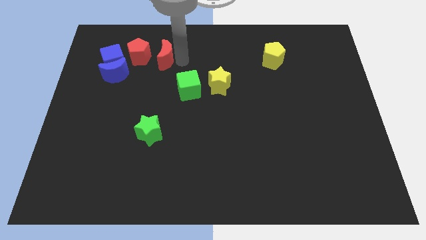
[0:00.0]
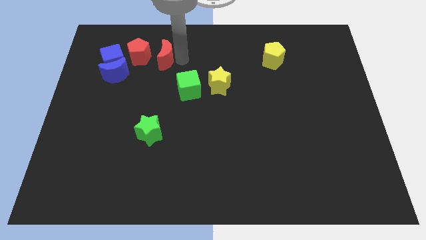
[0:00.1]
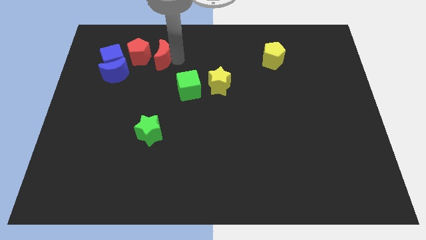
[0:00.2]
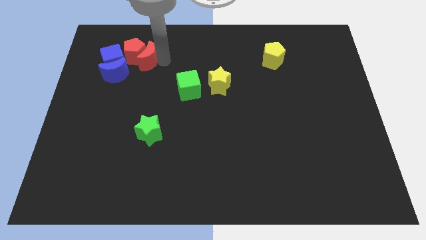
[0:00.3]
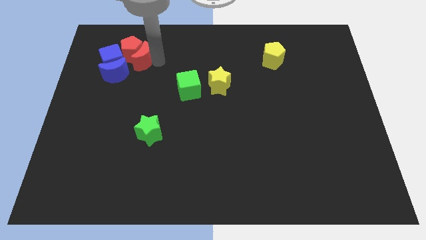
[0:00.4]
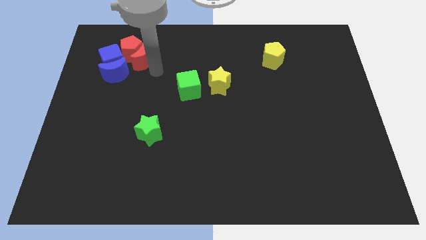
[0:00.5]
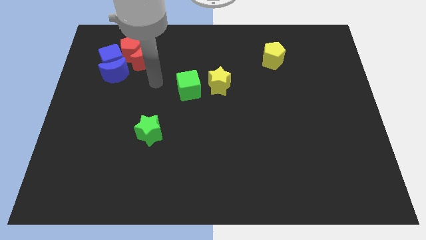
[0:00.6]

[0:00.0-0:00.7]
push red moon into red pentagon

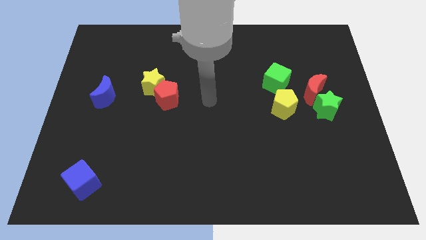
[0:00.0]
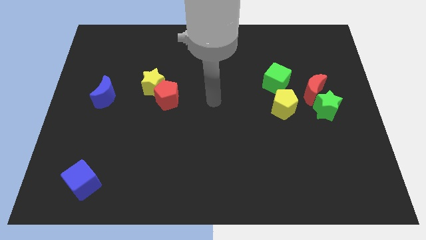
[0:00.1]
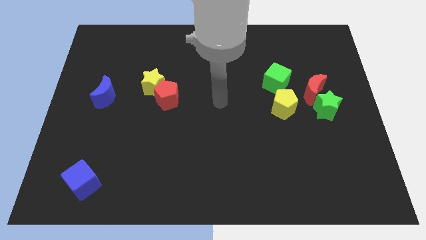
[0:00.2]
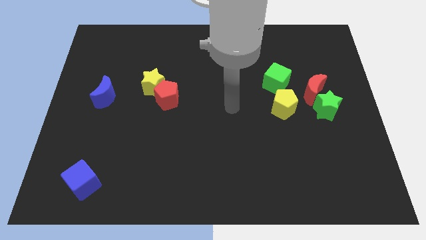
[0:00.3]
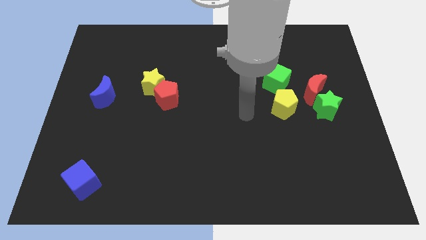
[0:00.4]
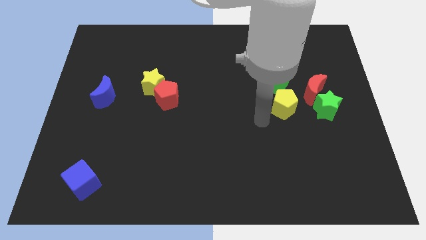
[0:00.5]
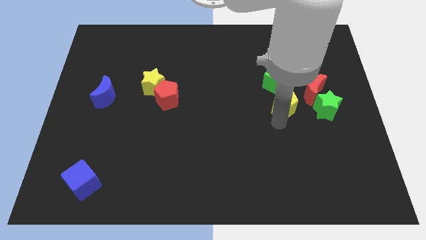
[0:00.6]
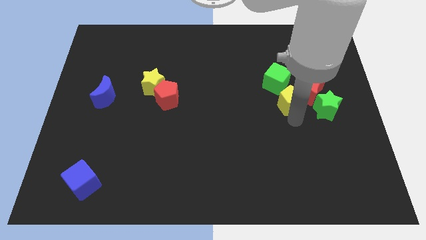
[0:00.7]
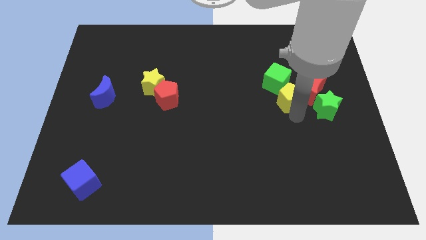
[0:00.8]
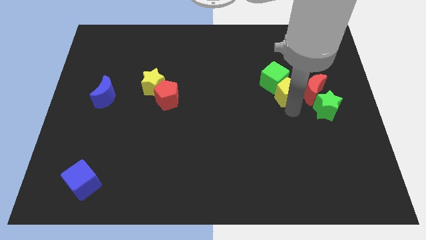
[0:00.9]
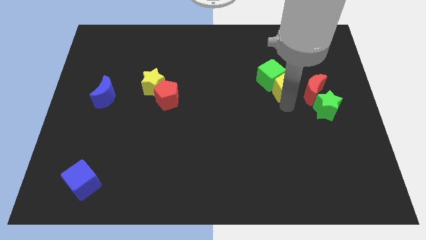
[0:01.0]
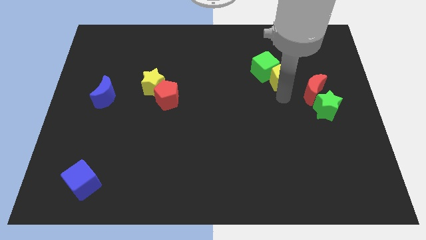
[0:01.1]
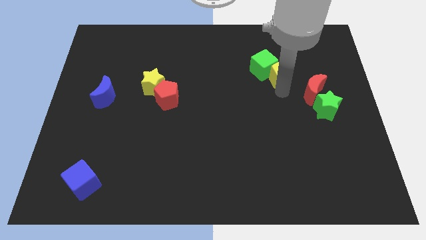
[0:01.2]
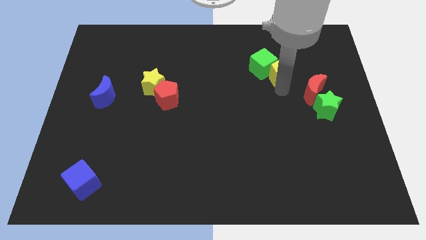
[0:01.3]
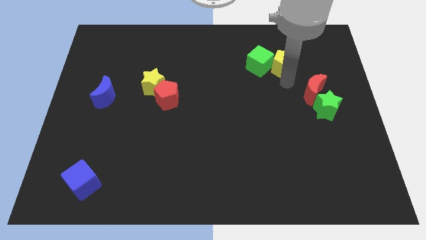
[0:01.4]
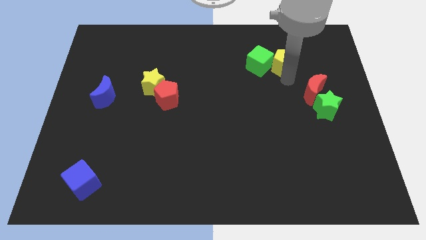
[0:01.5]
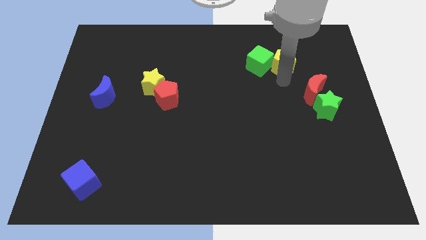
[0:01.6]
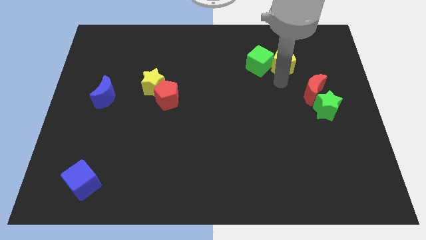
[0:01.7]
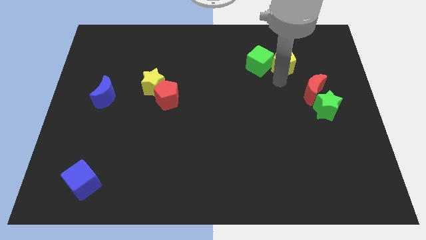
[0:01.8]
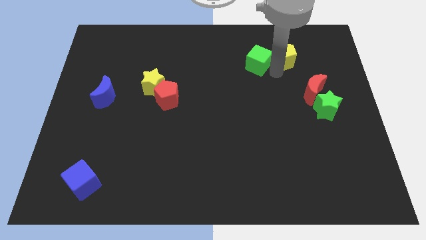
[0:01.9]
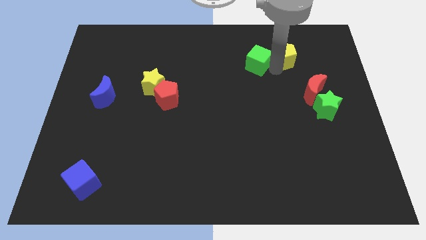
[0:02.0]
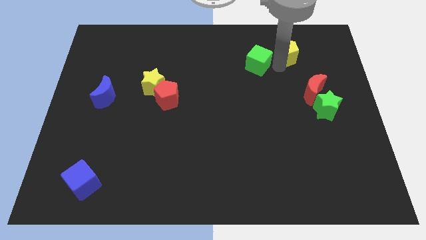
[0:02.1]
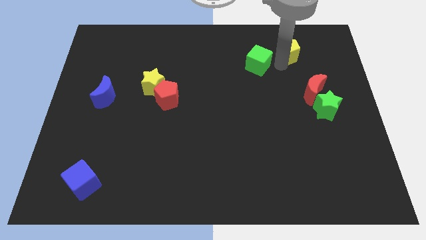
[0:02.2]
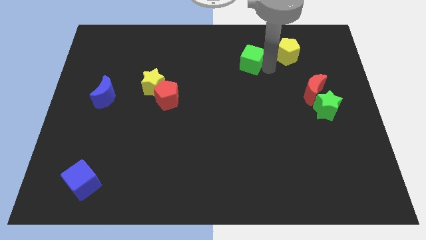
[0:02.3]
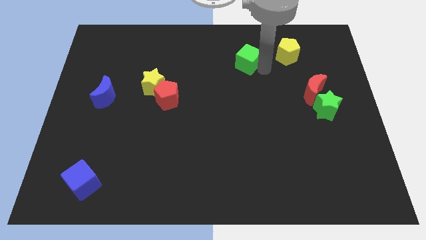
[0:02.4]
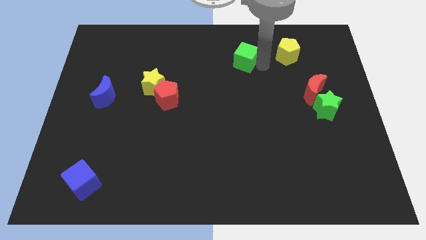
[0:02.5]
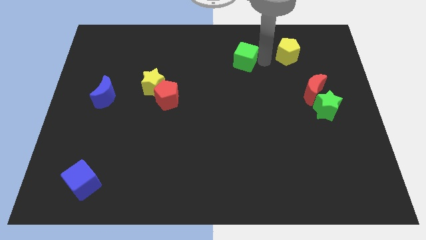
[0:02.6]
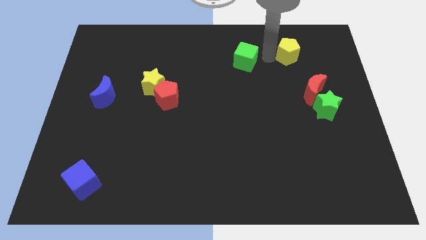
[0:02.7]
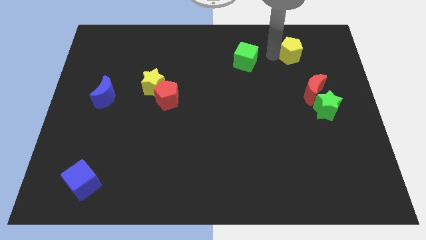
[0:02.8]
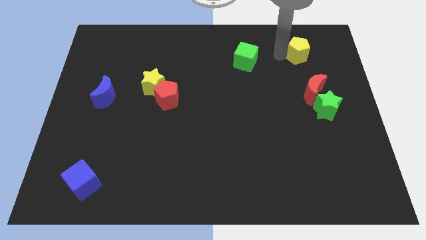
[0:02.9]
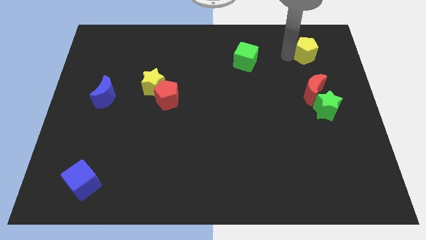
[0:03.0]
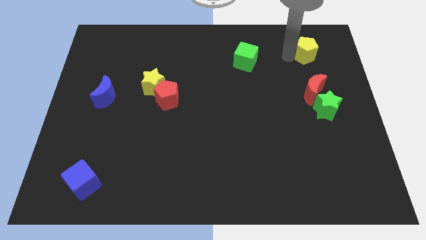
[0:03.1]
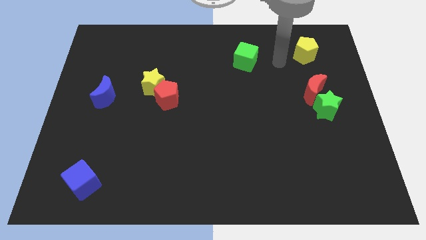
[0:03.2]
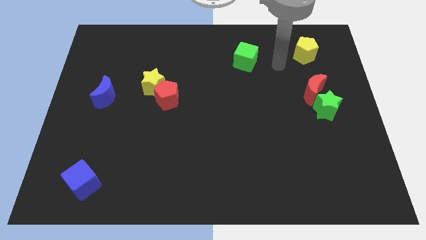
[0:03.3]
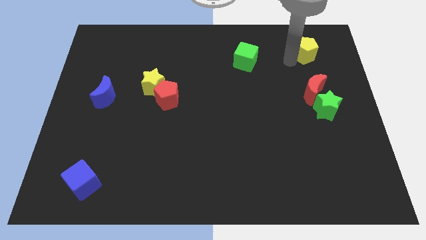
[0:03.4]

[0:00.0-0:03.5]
separate the green cube and yellow pentagon

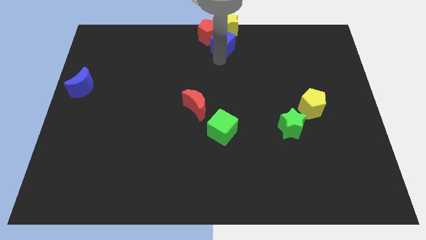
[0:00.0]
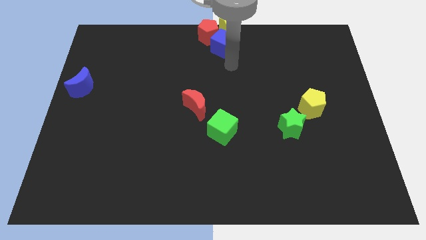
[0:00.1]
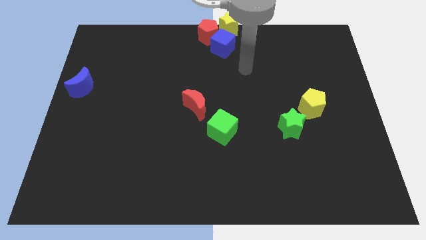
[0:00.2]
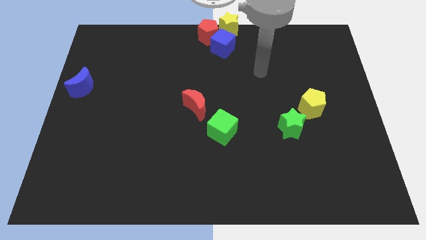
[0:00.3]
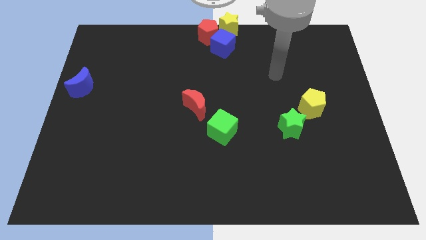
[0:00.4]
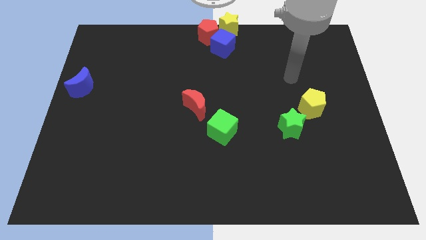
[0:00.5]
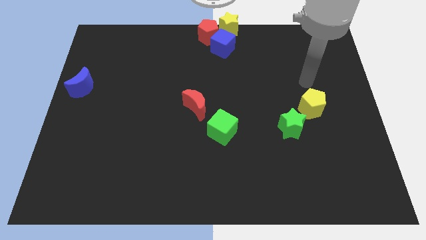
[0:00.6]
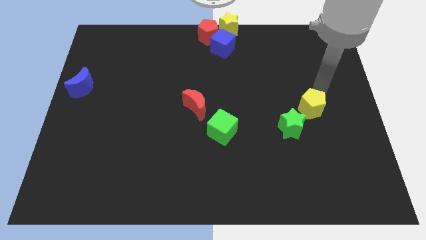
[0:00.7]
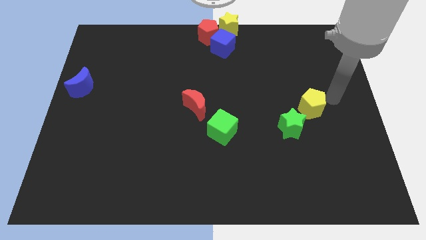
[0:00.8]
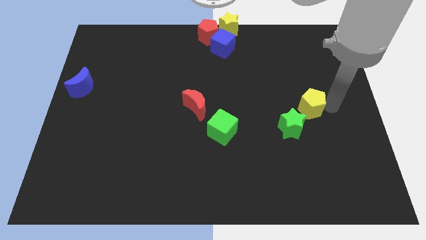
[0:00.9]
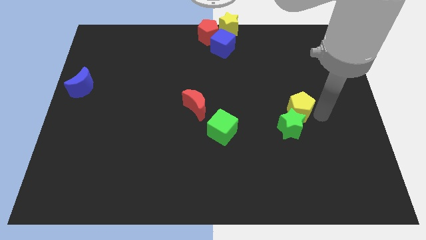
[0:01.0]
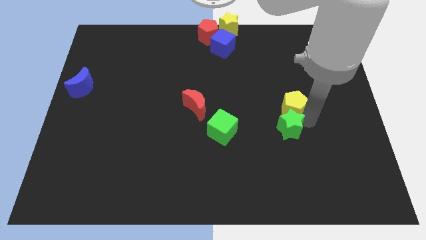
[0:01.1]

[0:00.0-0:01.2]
move your arm away from blue cube

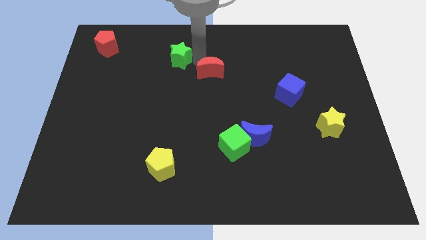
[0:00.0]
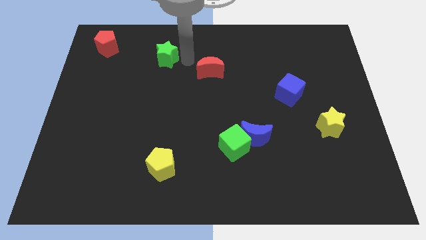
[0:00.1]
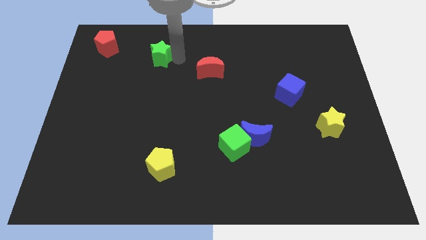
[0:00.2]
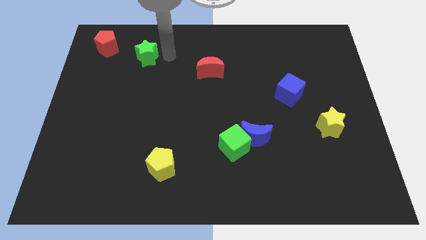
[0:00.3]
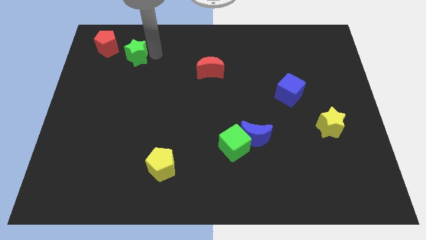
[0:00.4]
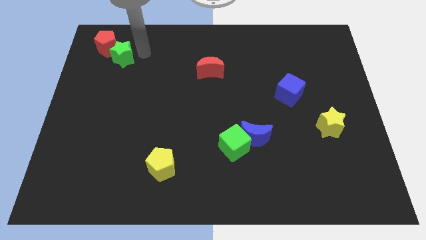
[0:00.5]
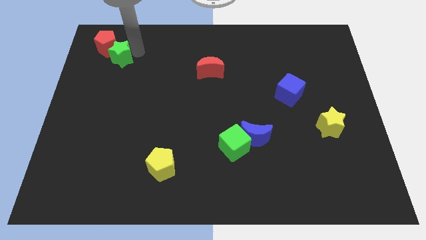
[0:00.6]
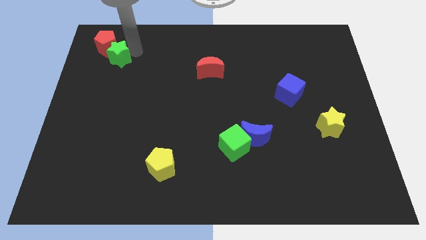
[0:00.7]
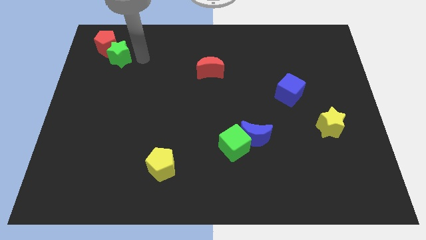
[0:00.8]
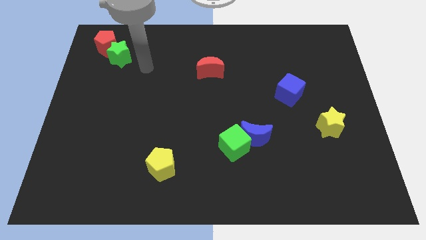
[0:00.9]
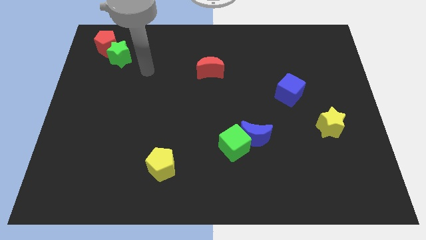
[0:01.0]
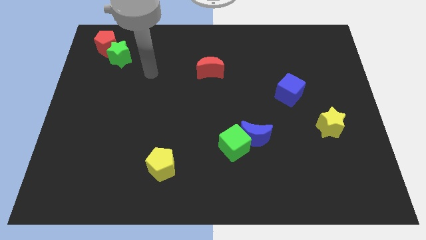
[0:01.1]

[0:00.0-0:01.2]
push the green star close to the red pentagon

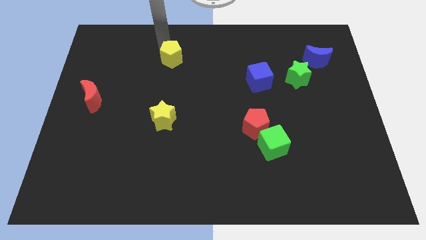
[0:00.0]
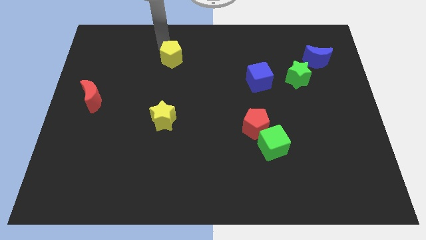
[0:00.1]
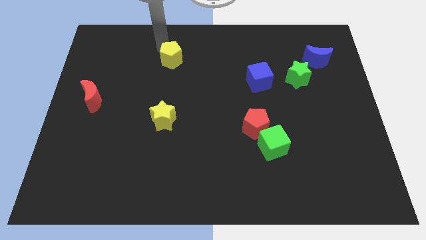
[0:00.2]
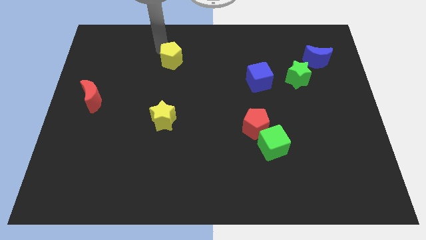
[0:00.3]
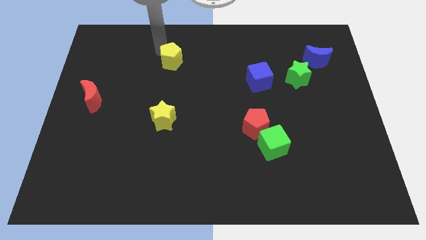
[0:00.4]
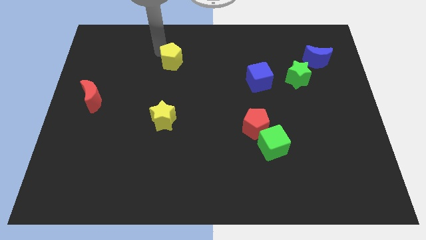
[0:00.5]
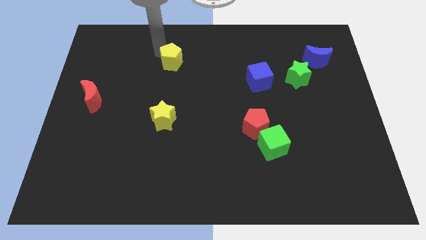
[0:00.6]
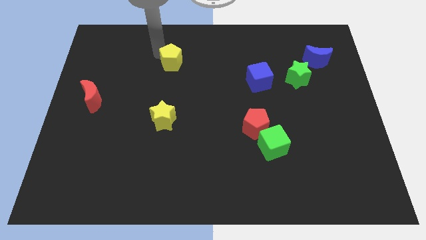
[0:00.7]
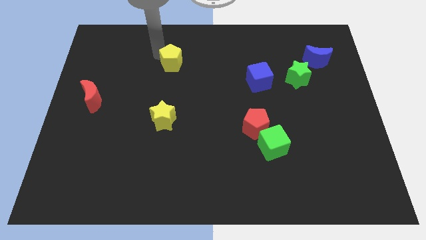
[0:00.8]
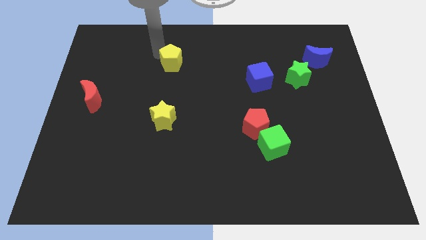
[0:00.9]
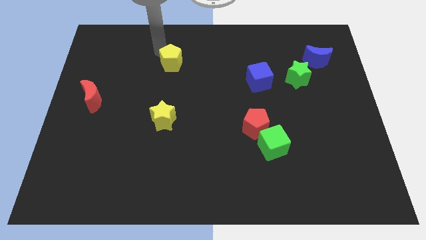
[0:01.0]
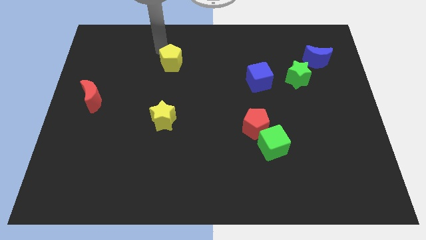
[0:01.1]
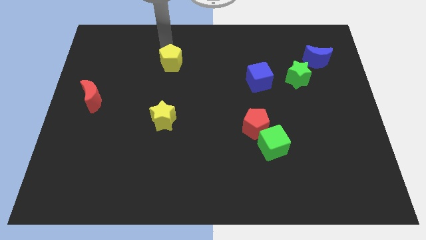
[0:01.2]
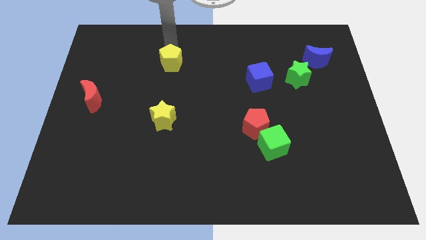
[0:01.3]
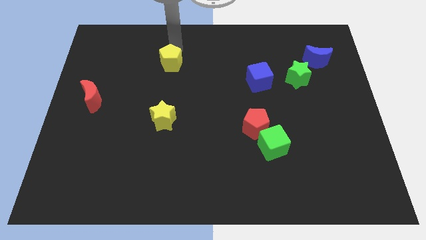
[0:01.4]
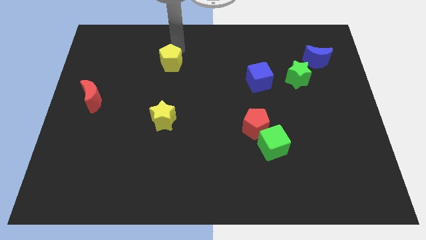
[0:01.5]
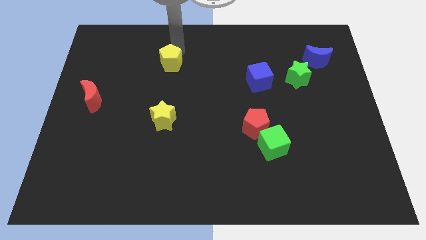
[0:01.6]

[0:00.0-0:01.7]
slightly push the yellow pentagon downward

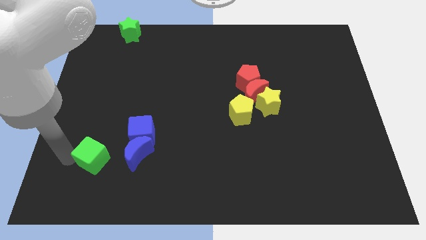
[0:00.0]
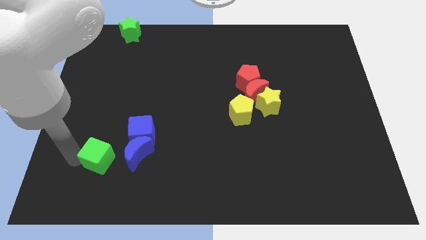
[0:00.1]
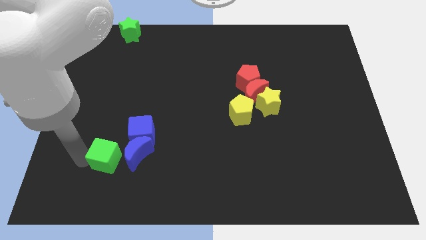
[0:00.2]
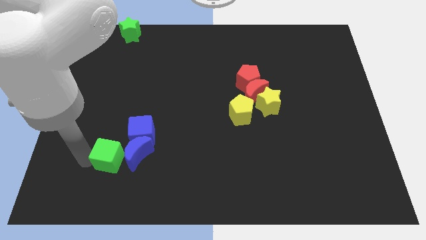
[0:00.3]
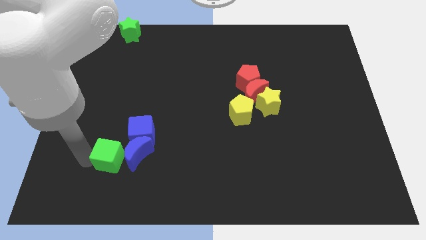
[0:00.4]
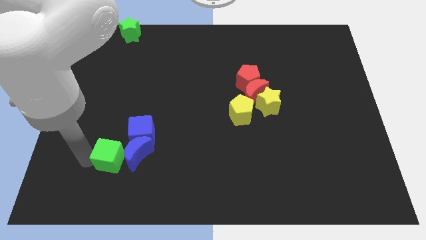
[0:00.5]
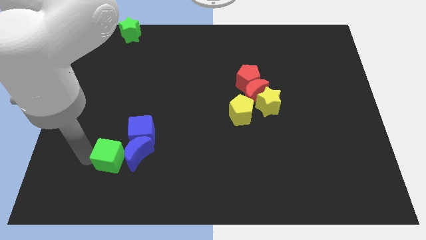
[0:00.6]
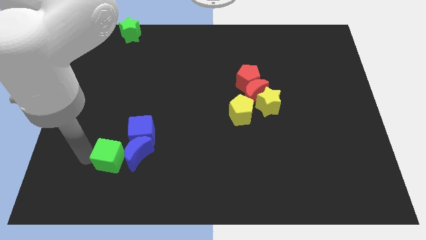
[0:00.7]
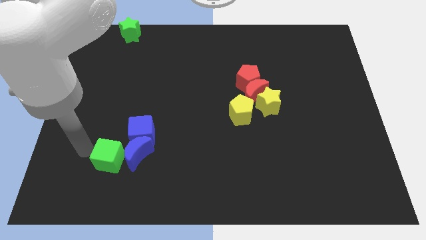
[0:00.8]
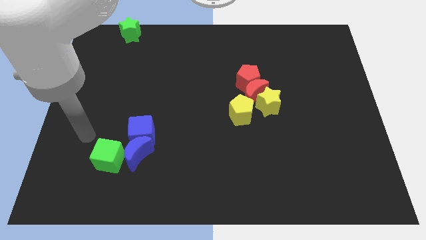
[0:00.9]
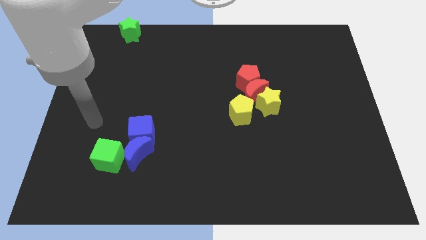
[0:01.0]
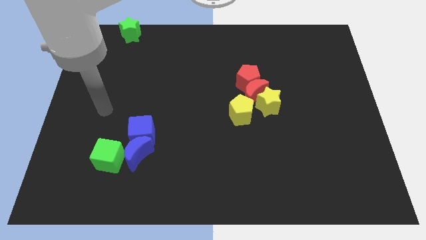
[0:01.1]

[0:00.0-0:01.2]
place the green cube close to blue blocks
